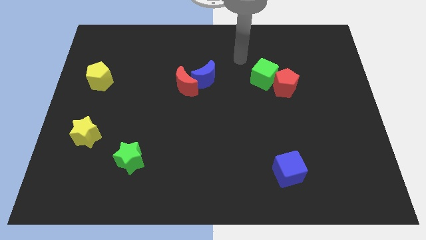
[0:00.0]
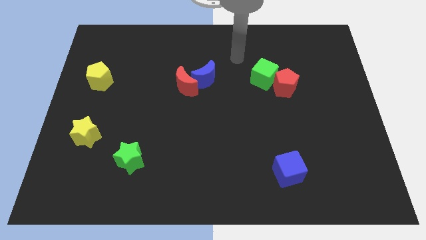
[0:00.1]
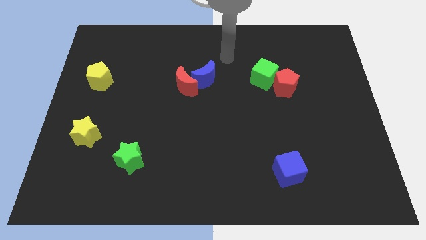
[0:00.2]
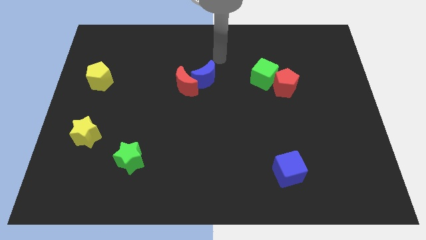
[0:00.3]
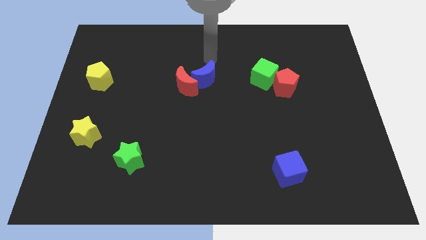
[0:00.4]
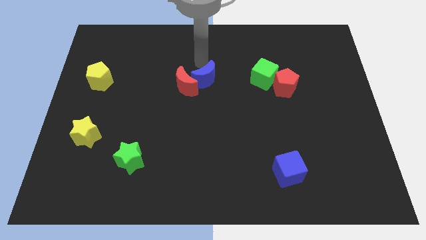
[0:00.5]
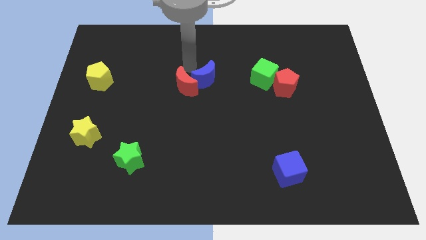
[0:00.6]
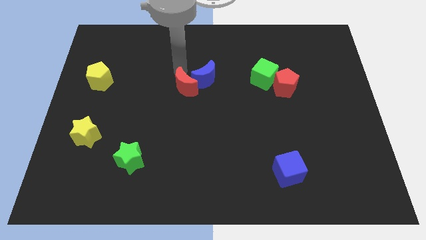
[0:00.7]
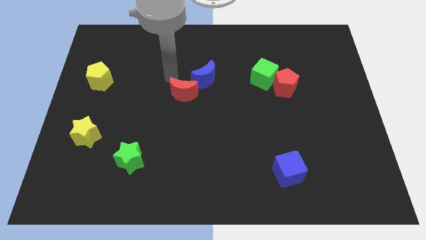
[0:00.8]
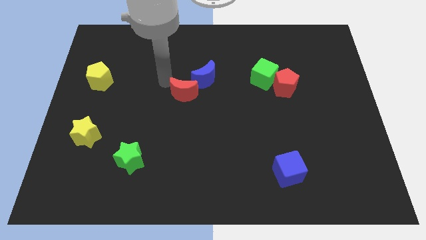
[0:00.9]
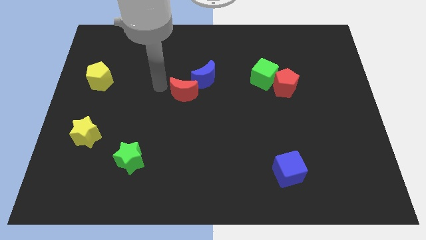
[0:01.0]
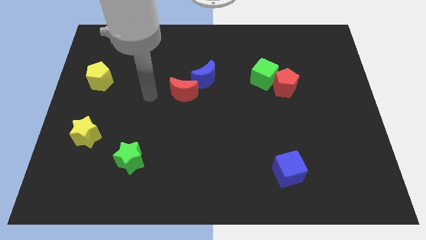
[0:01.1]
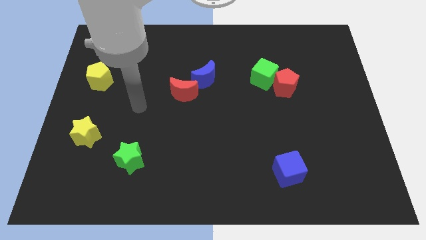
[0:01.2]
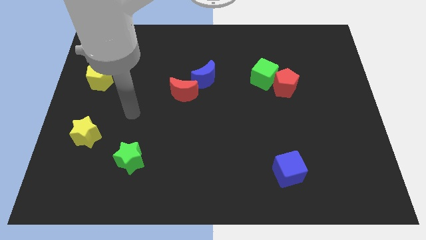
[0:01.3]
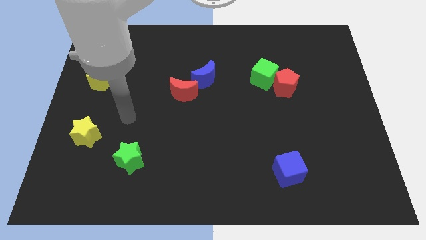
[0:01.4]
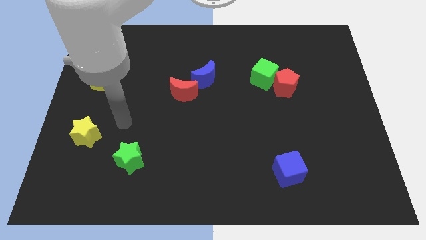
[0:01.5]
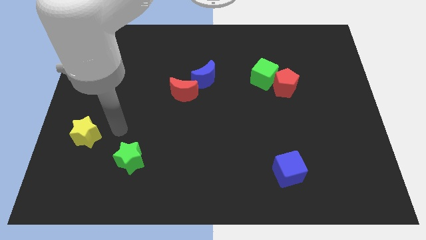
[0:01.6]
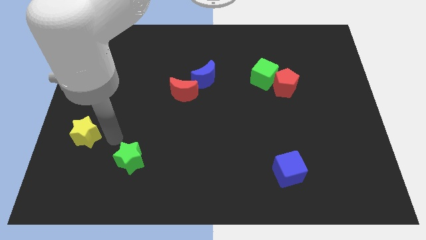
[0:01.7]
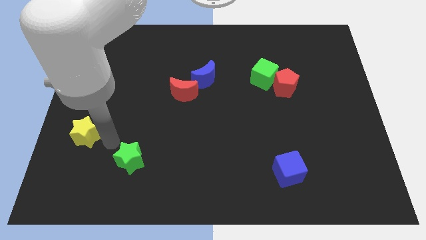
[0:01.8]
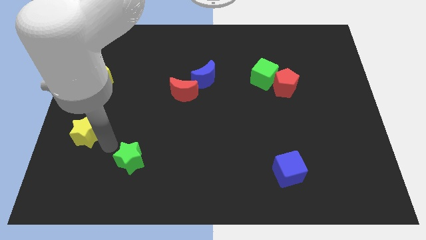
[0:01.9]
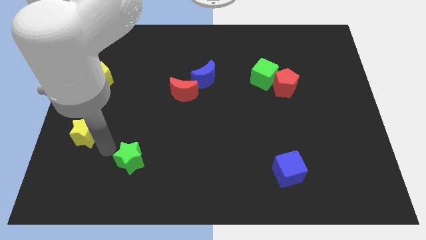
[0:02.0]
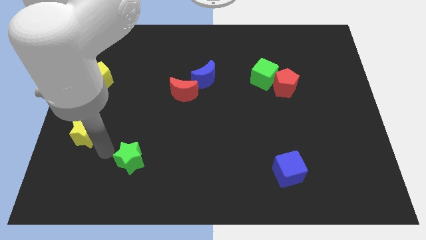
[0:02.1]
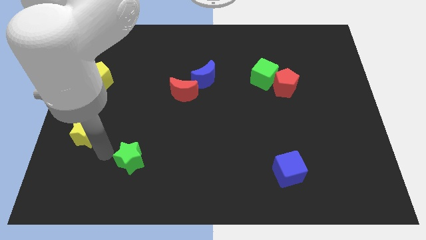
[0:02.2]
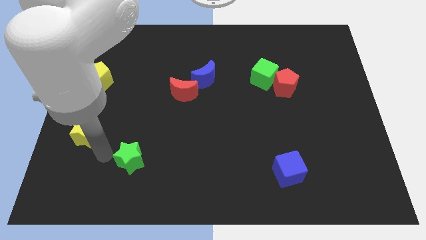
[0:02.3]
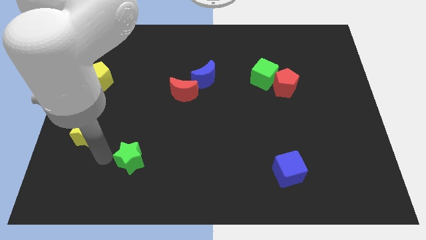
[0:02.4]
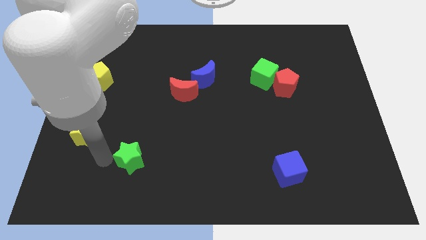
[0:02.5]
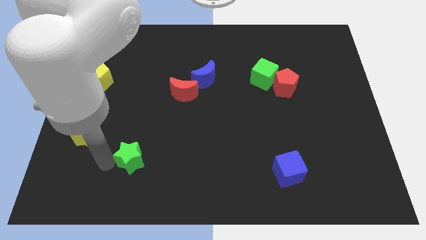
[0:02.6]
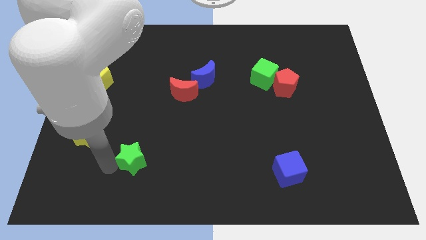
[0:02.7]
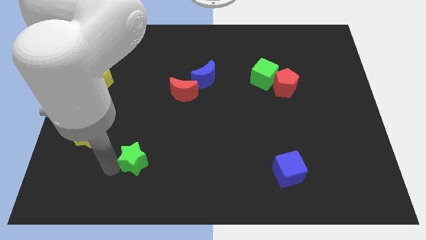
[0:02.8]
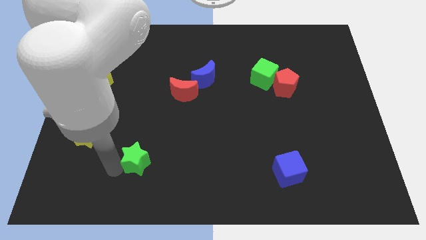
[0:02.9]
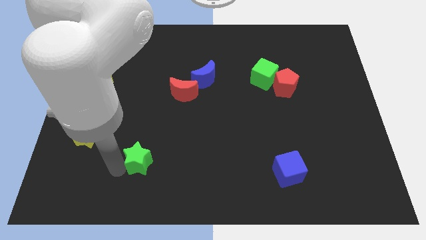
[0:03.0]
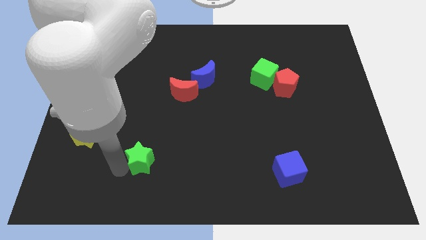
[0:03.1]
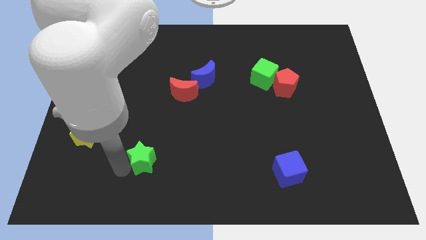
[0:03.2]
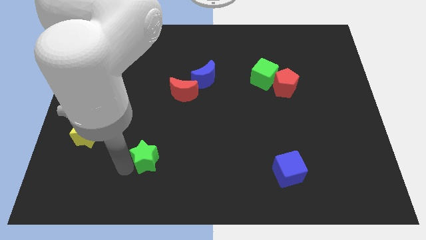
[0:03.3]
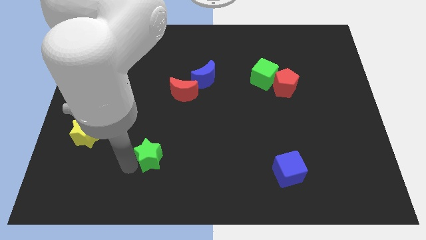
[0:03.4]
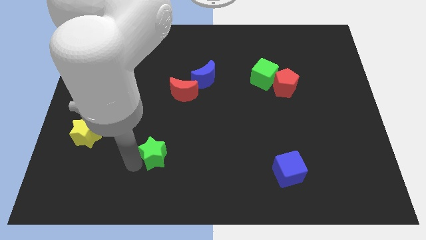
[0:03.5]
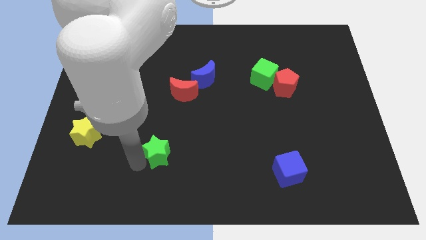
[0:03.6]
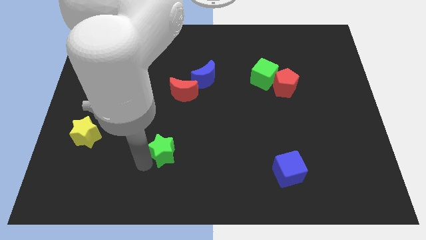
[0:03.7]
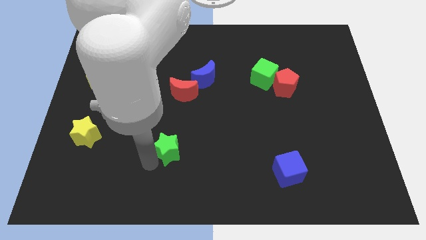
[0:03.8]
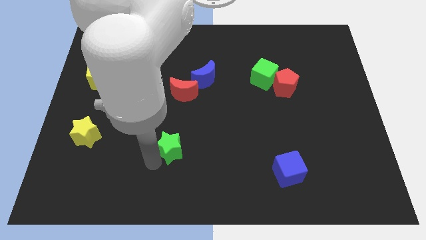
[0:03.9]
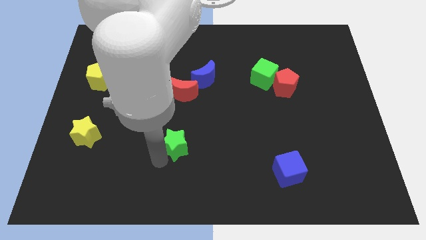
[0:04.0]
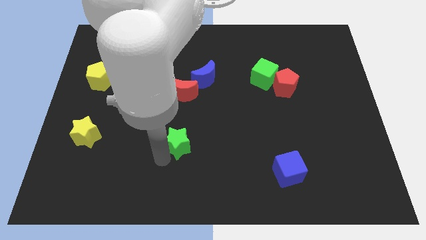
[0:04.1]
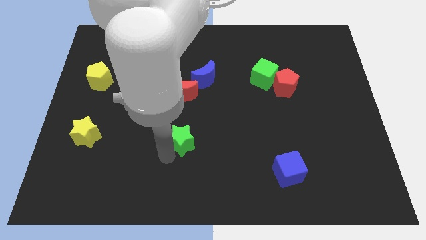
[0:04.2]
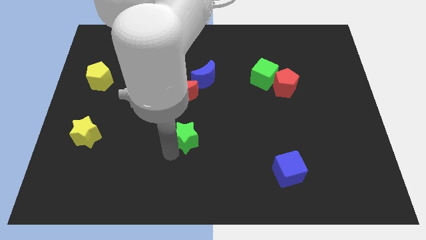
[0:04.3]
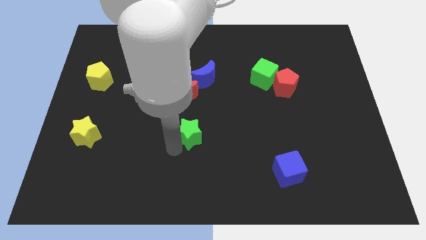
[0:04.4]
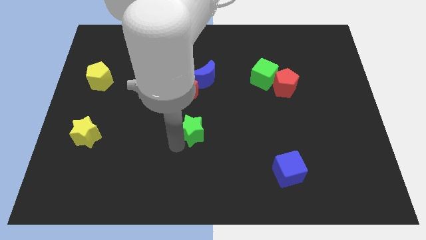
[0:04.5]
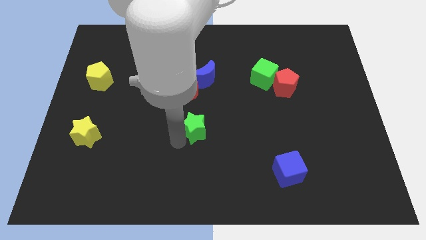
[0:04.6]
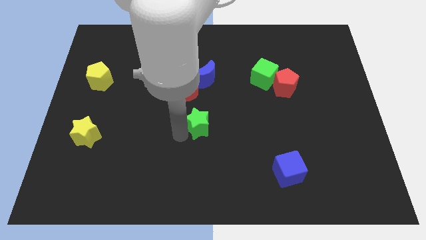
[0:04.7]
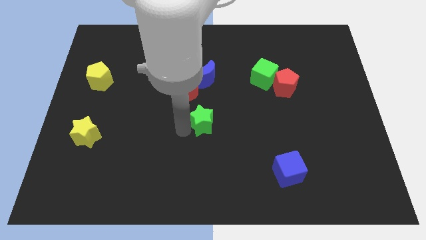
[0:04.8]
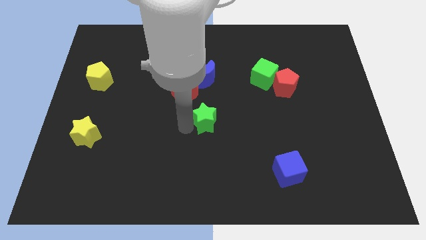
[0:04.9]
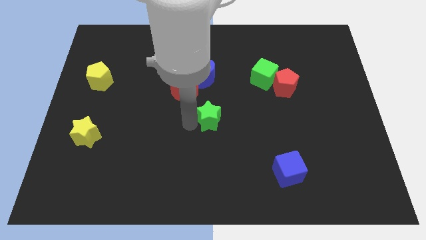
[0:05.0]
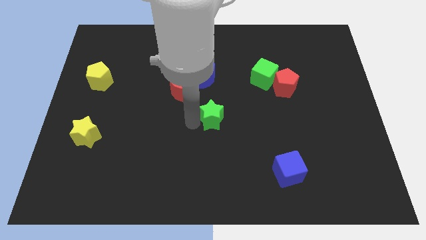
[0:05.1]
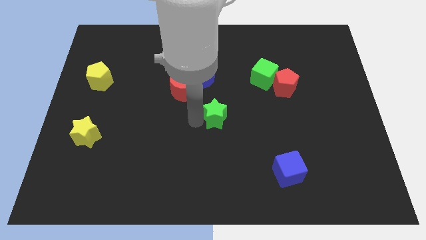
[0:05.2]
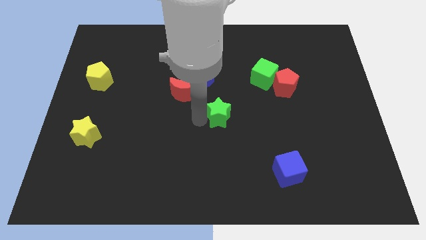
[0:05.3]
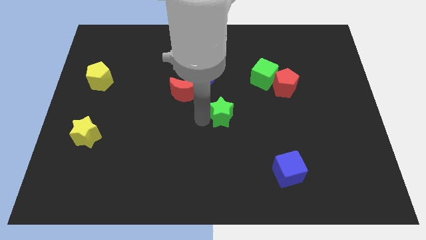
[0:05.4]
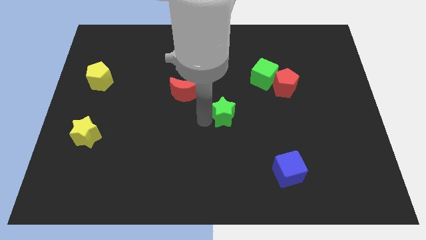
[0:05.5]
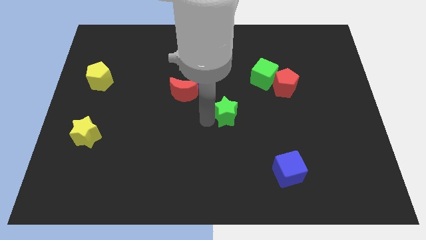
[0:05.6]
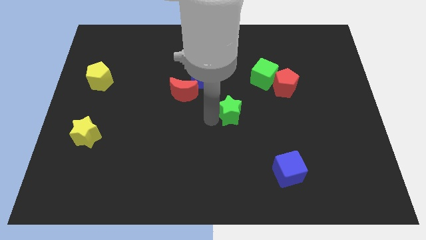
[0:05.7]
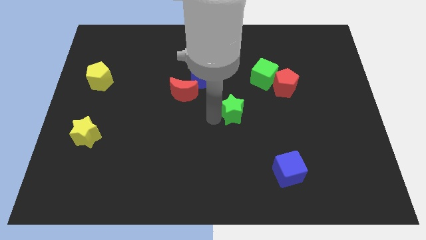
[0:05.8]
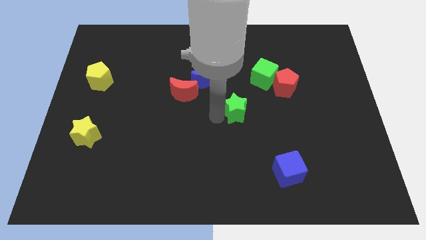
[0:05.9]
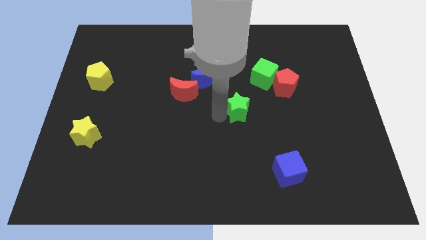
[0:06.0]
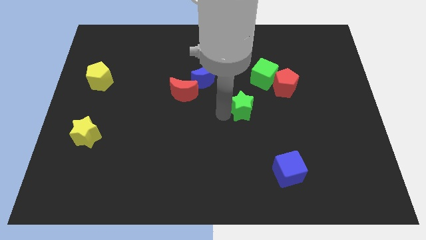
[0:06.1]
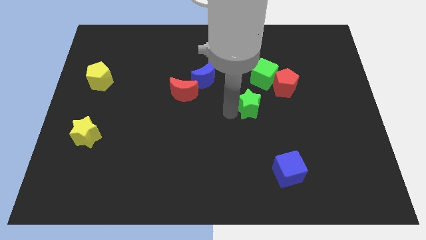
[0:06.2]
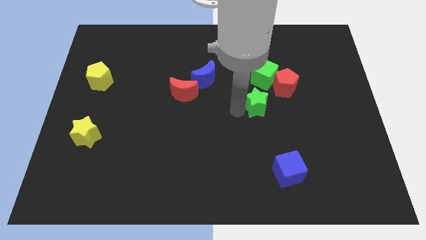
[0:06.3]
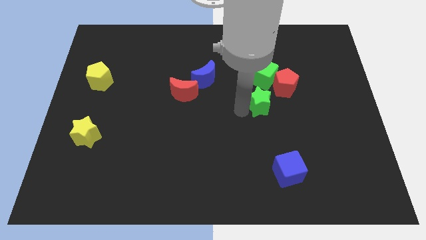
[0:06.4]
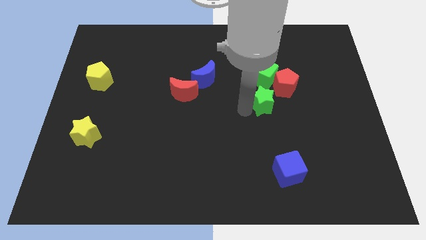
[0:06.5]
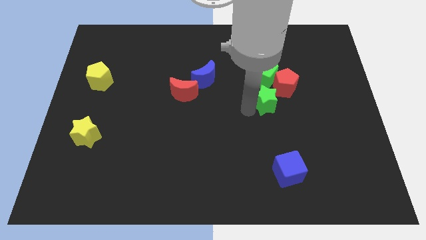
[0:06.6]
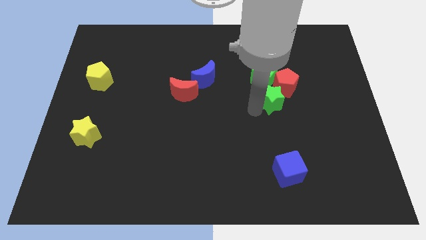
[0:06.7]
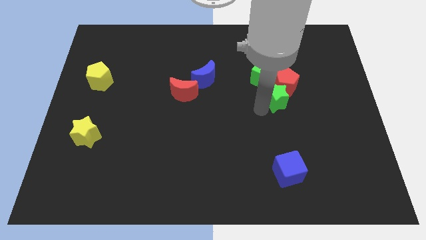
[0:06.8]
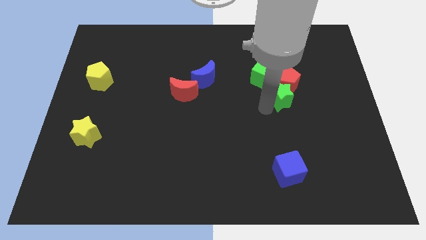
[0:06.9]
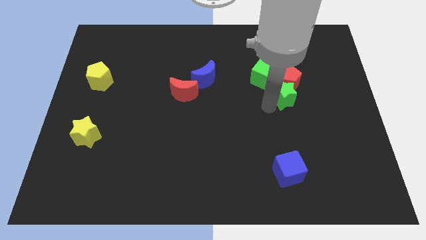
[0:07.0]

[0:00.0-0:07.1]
move the green star next to the red pentagon

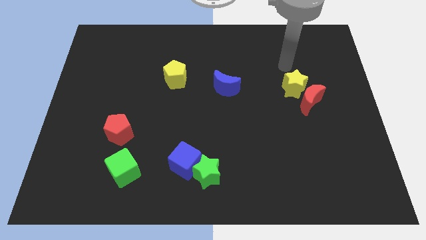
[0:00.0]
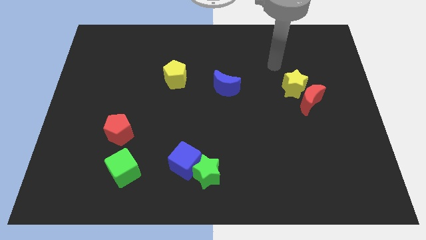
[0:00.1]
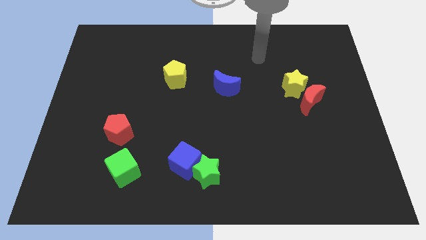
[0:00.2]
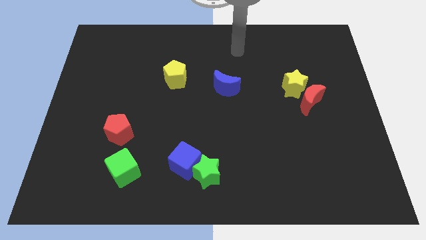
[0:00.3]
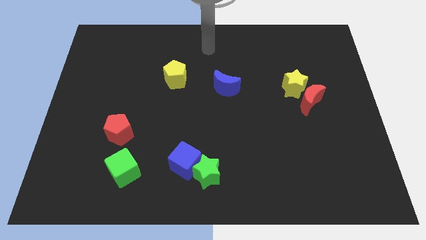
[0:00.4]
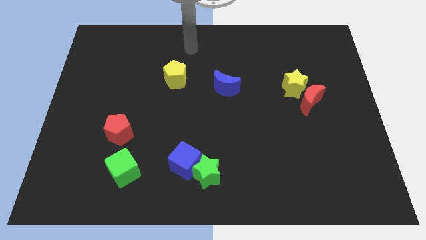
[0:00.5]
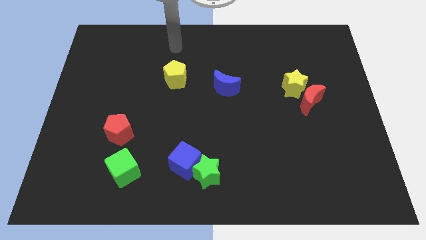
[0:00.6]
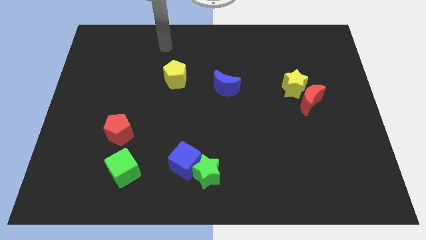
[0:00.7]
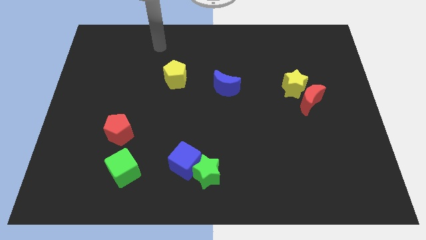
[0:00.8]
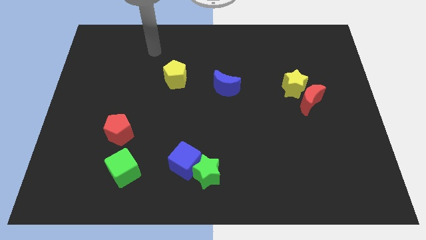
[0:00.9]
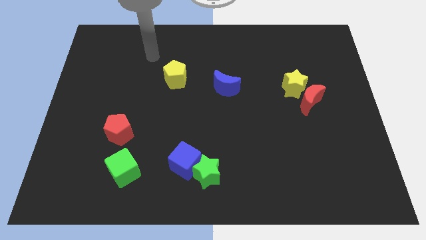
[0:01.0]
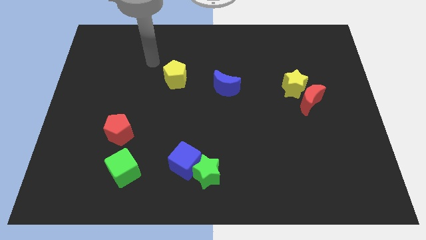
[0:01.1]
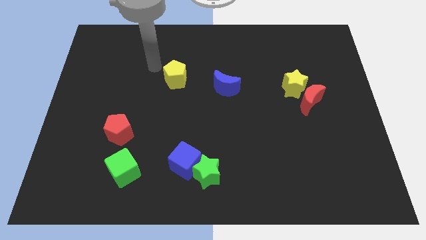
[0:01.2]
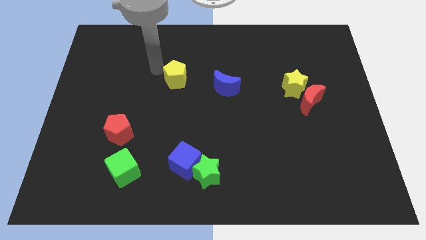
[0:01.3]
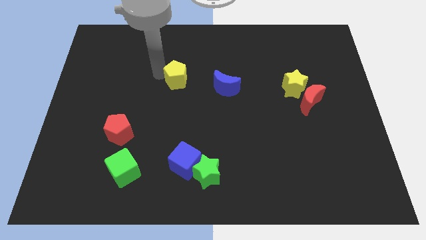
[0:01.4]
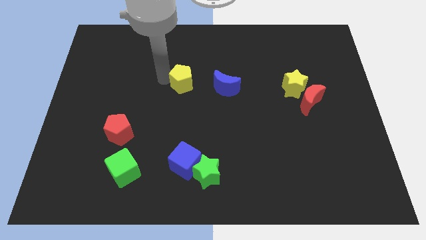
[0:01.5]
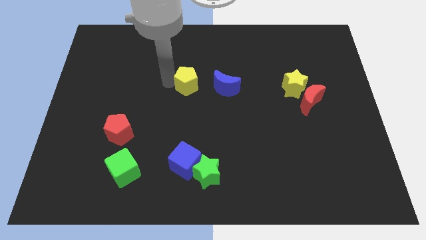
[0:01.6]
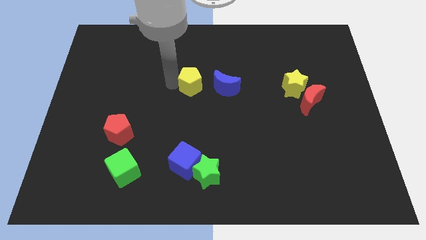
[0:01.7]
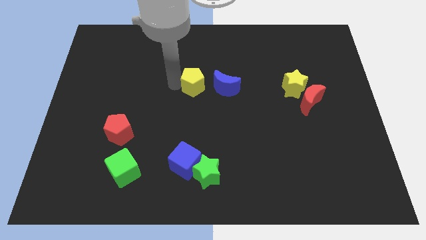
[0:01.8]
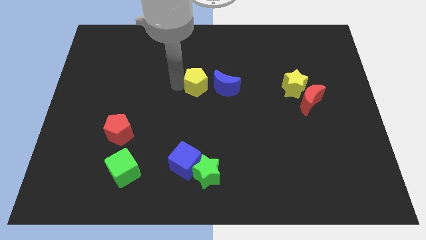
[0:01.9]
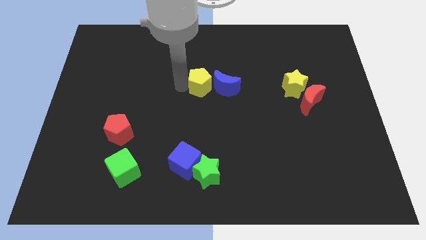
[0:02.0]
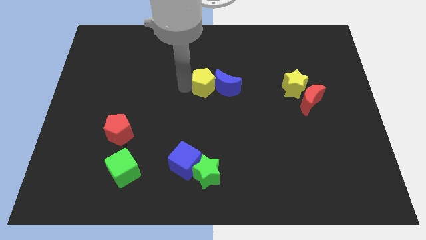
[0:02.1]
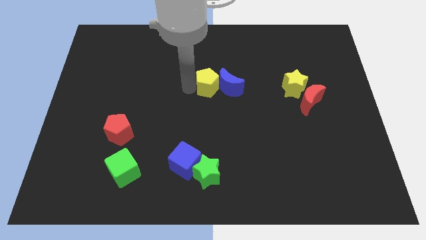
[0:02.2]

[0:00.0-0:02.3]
slide the yellow pentagon to the blue moon
